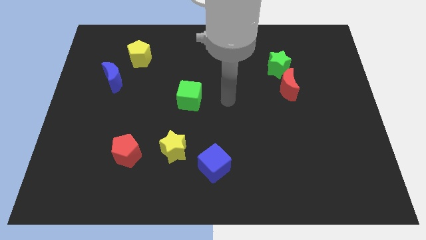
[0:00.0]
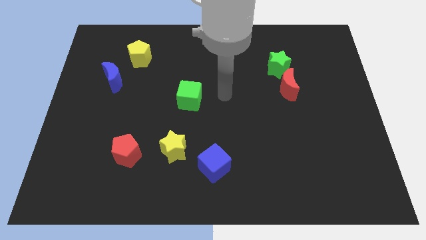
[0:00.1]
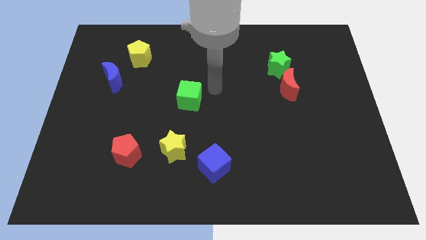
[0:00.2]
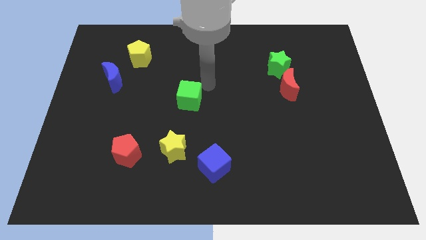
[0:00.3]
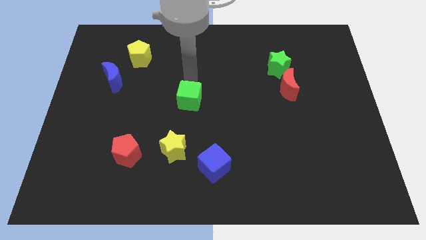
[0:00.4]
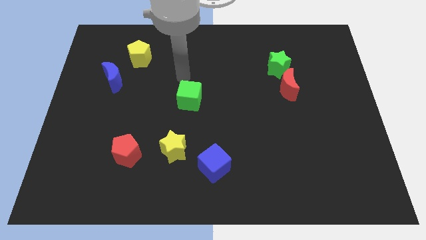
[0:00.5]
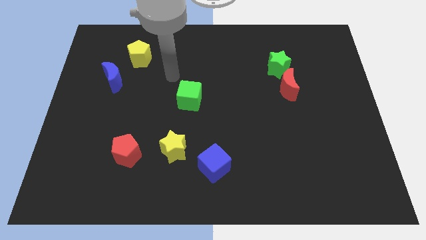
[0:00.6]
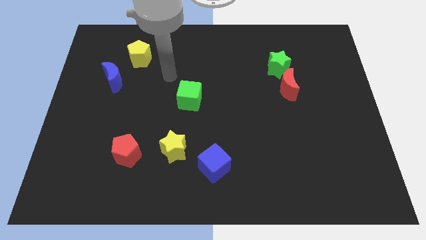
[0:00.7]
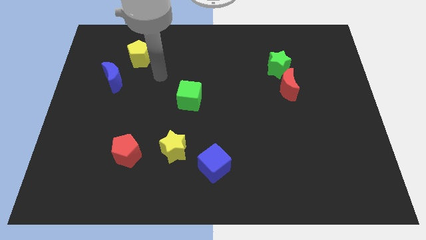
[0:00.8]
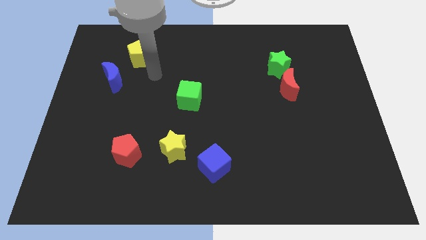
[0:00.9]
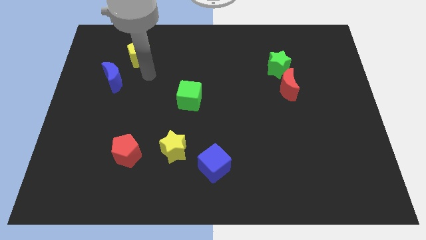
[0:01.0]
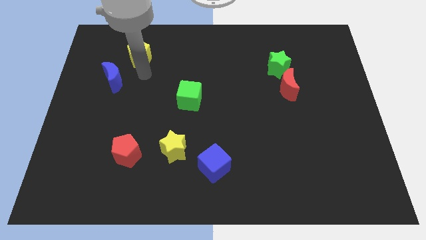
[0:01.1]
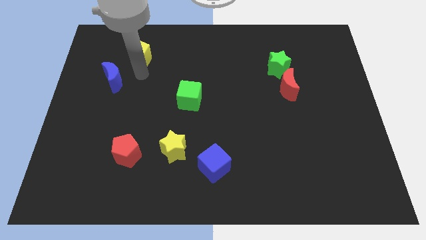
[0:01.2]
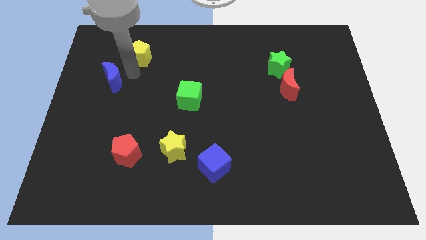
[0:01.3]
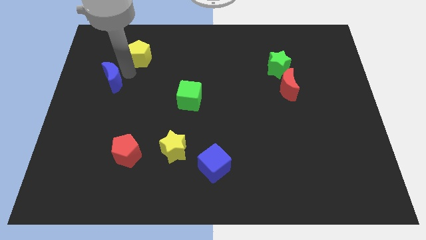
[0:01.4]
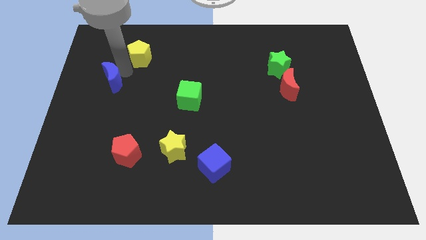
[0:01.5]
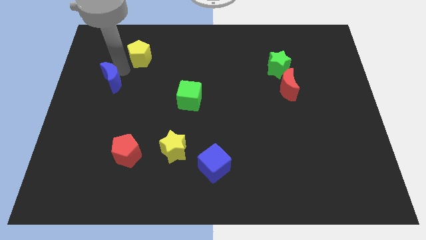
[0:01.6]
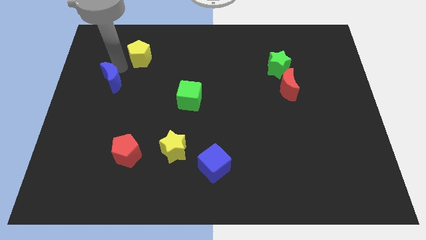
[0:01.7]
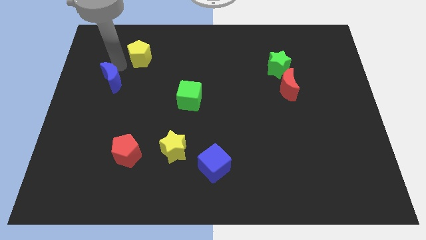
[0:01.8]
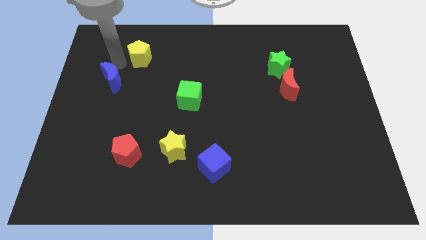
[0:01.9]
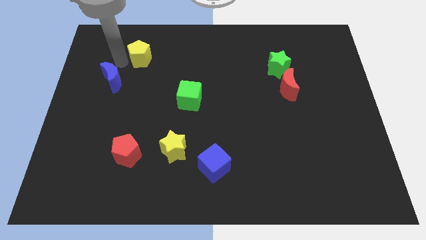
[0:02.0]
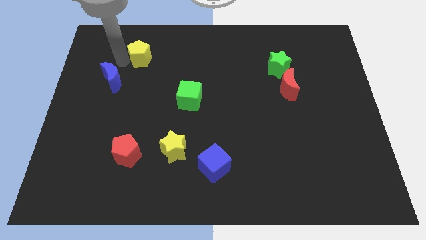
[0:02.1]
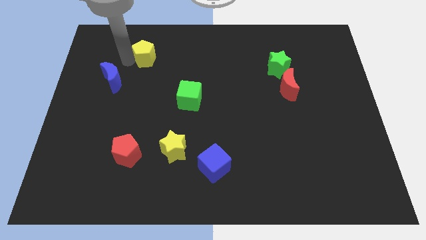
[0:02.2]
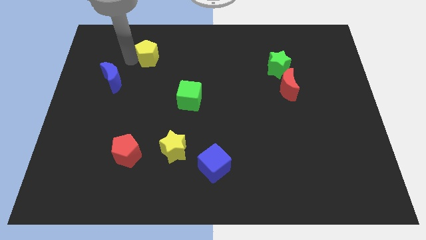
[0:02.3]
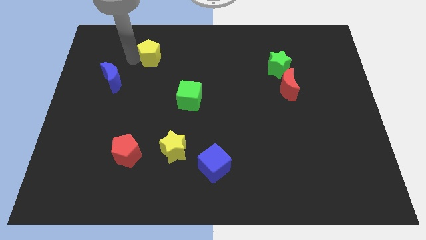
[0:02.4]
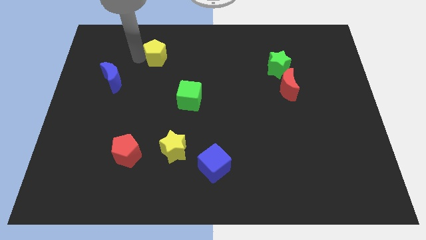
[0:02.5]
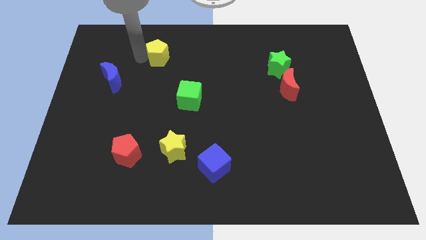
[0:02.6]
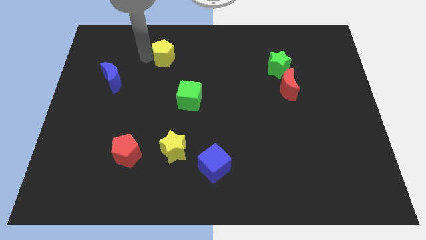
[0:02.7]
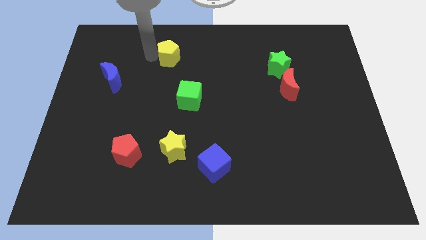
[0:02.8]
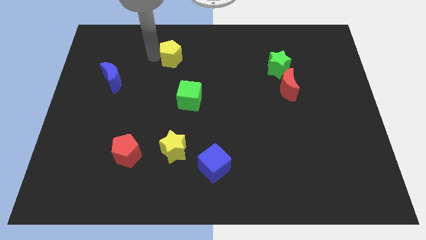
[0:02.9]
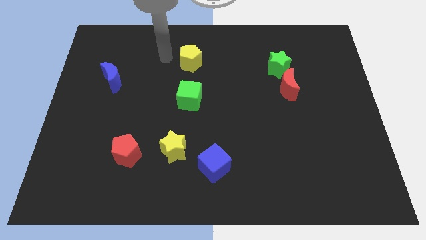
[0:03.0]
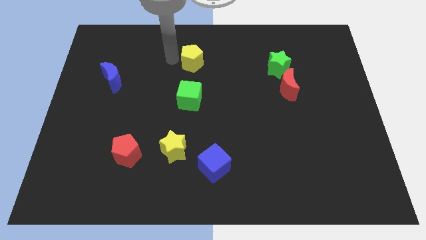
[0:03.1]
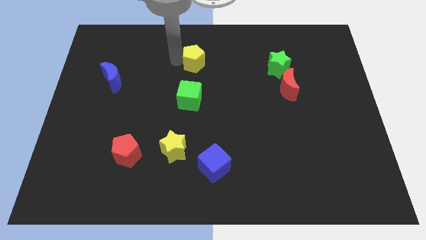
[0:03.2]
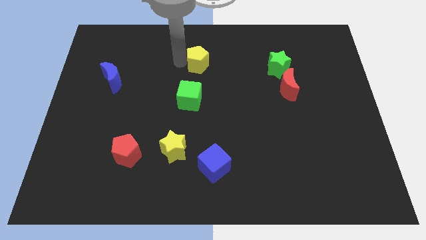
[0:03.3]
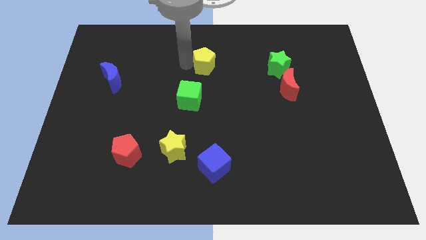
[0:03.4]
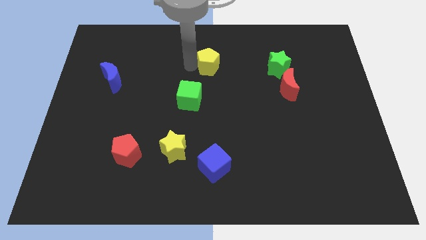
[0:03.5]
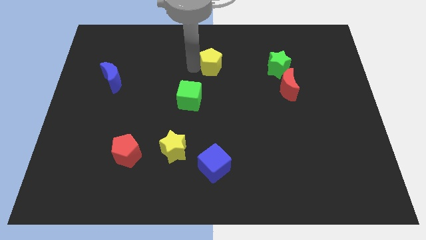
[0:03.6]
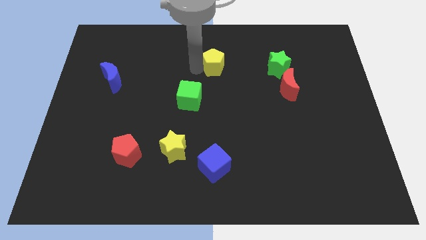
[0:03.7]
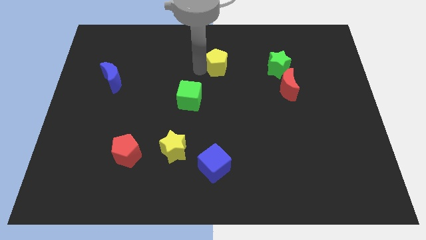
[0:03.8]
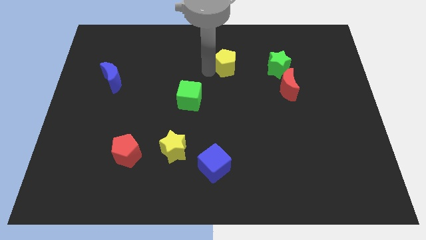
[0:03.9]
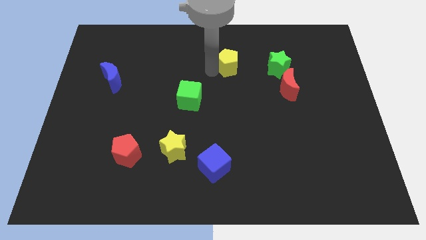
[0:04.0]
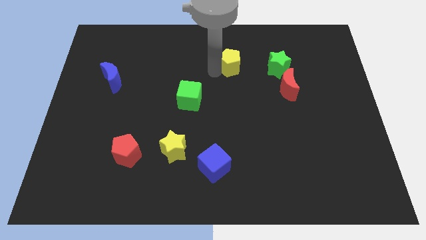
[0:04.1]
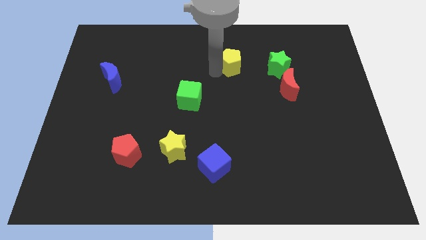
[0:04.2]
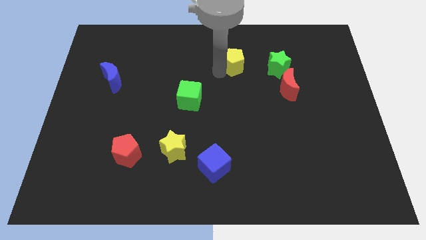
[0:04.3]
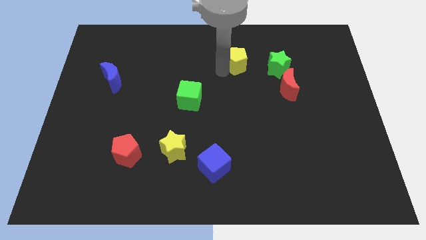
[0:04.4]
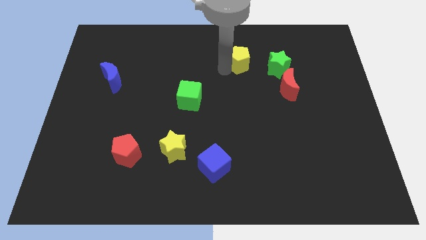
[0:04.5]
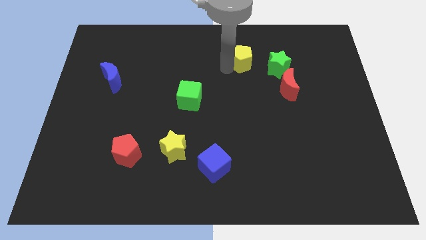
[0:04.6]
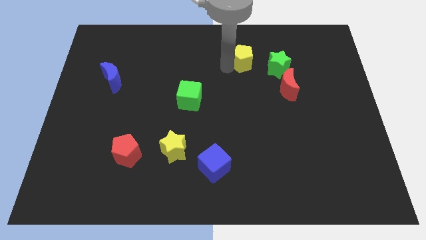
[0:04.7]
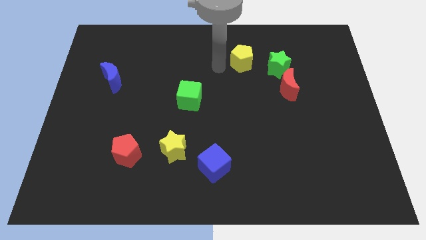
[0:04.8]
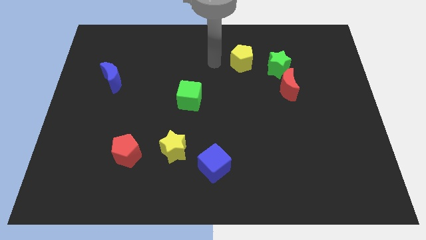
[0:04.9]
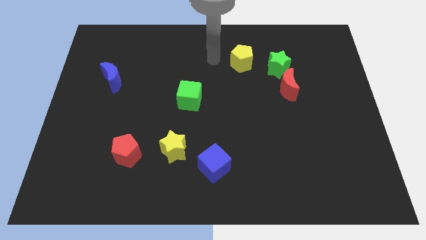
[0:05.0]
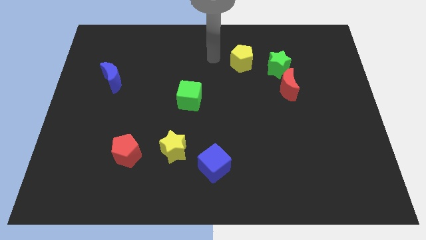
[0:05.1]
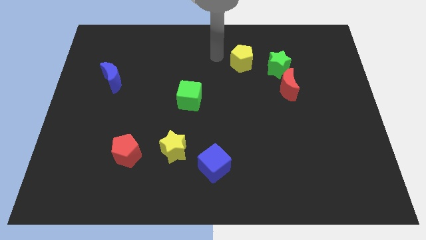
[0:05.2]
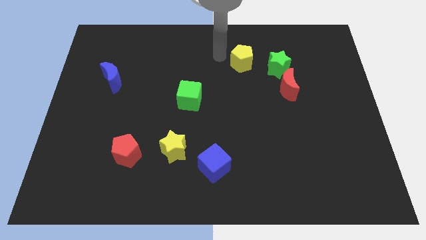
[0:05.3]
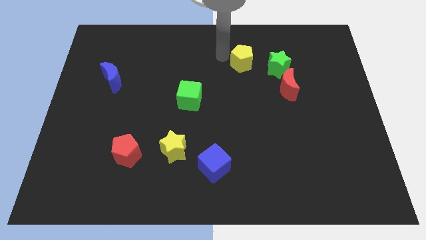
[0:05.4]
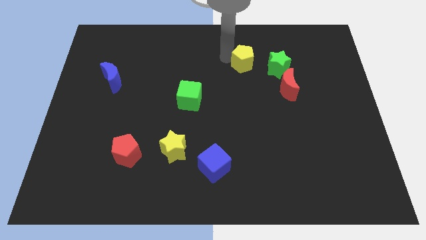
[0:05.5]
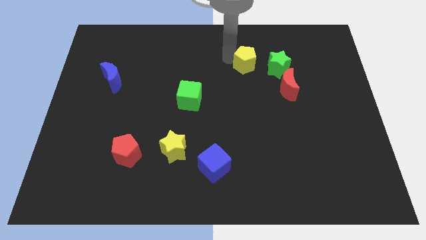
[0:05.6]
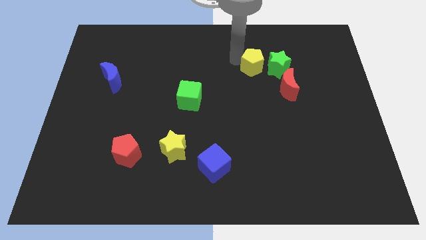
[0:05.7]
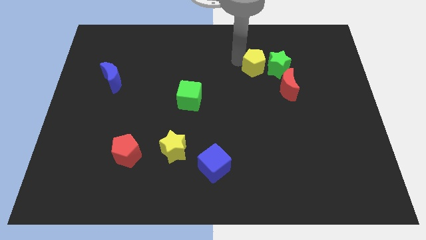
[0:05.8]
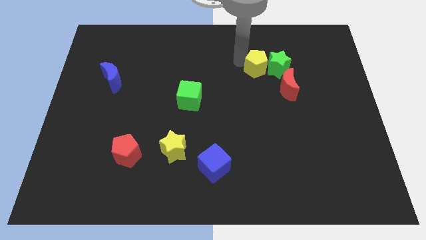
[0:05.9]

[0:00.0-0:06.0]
push the yellow pentagon towards the green star

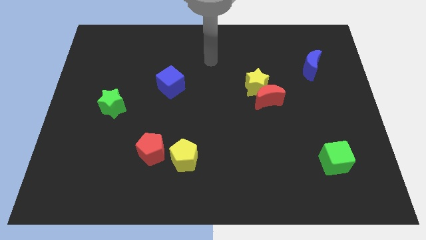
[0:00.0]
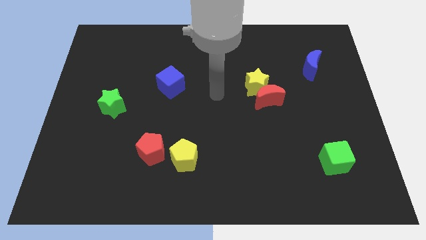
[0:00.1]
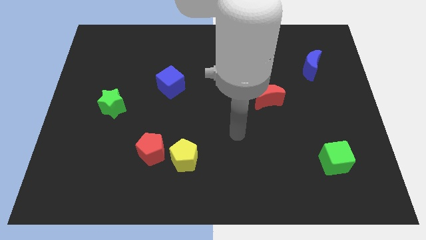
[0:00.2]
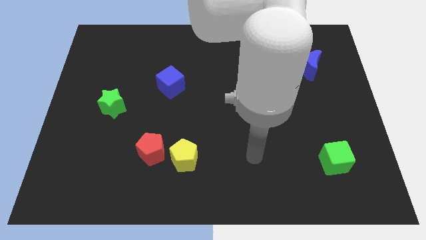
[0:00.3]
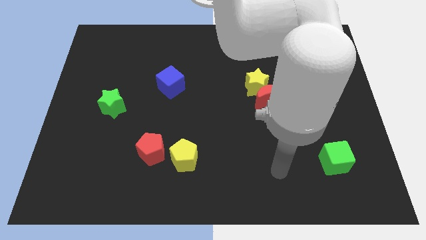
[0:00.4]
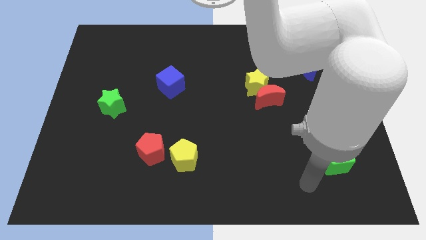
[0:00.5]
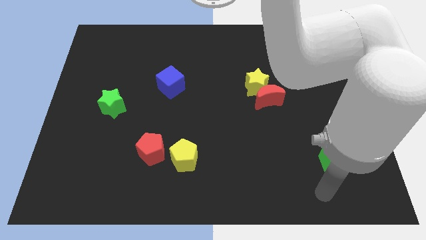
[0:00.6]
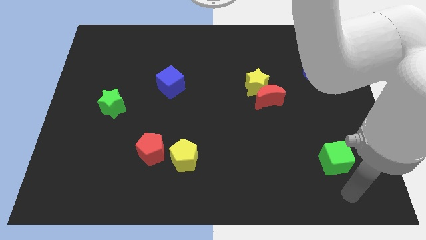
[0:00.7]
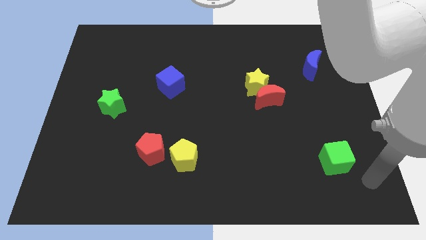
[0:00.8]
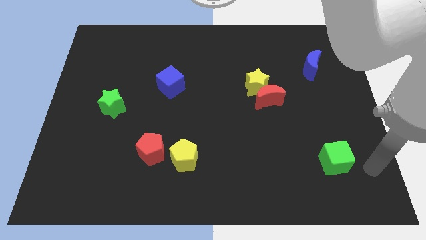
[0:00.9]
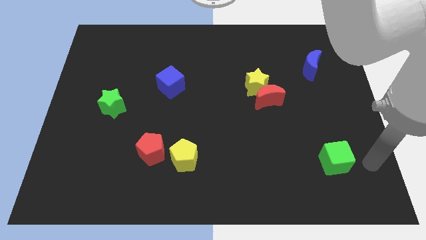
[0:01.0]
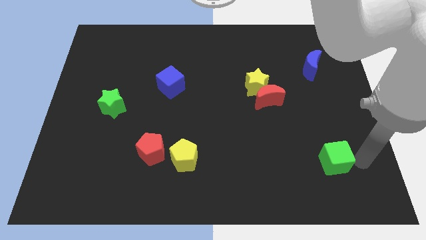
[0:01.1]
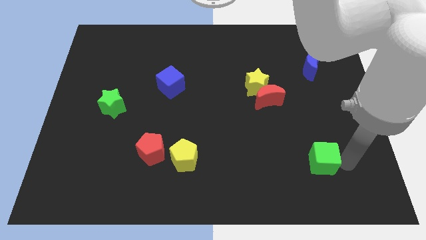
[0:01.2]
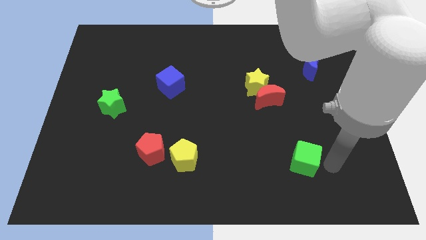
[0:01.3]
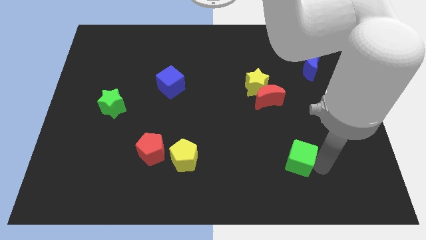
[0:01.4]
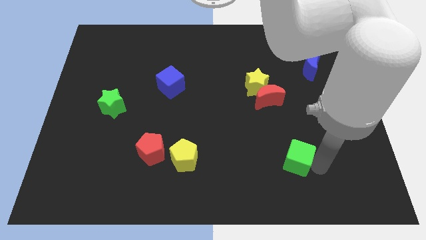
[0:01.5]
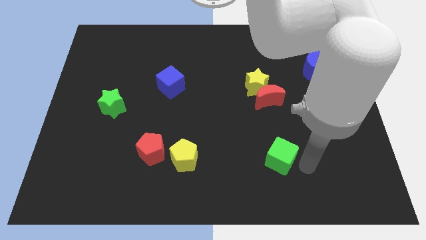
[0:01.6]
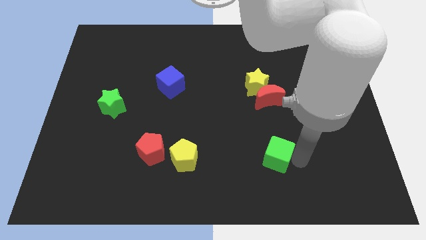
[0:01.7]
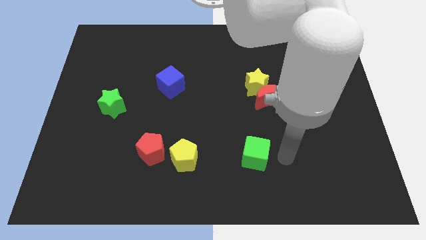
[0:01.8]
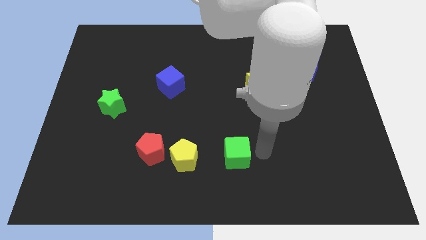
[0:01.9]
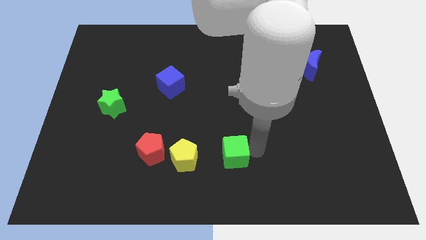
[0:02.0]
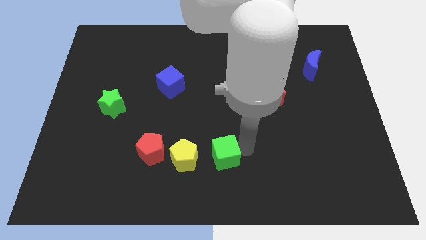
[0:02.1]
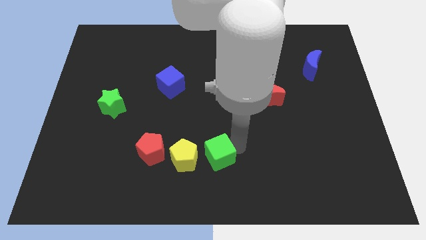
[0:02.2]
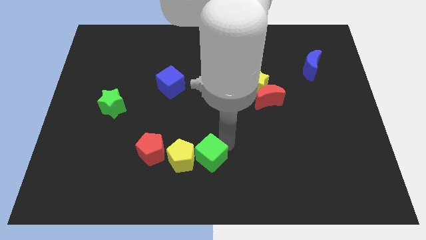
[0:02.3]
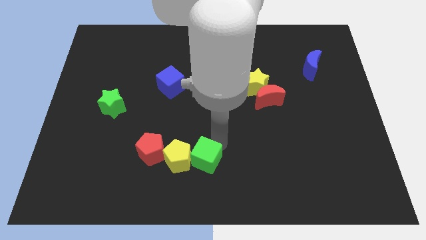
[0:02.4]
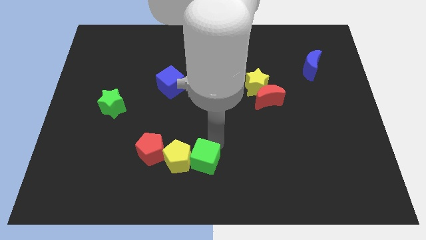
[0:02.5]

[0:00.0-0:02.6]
push the green cube next to the yellow pentagon

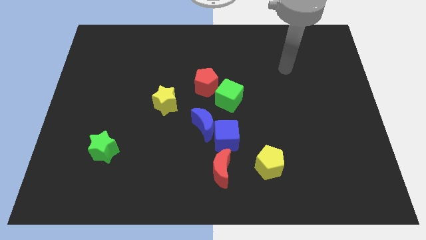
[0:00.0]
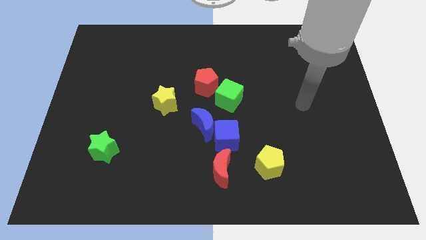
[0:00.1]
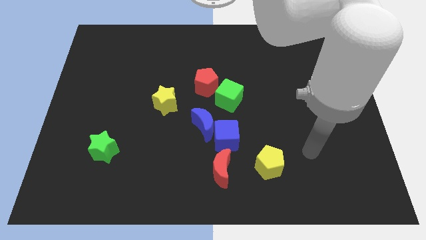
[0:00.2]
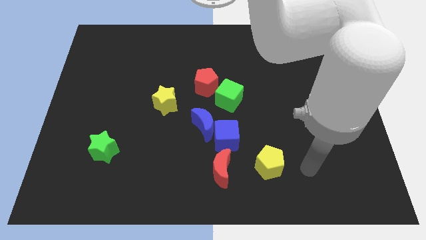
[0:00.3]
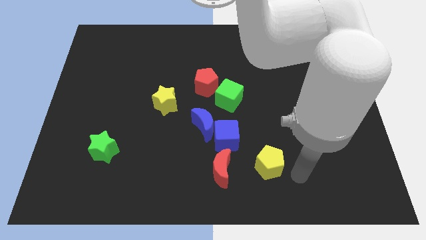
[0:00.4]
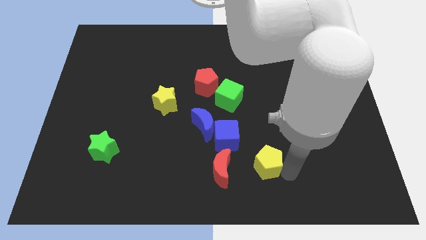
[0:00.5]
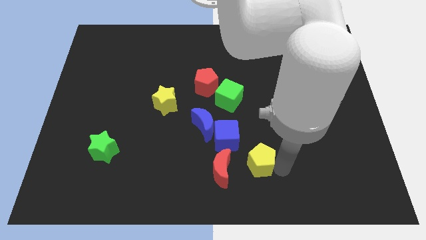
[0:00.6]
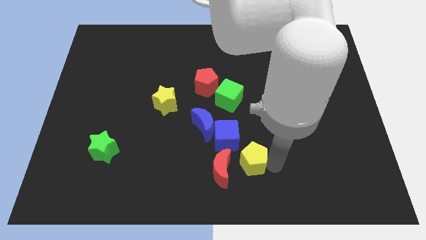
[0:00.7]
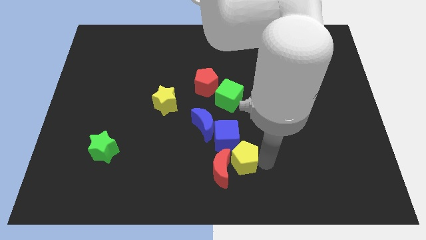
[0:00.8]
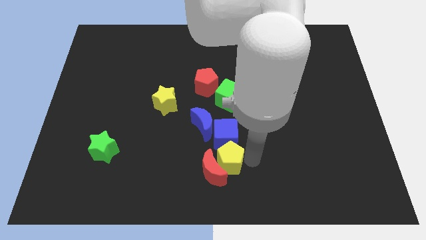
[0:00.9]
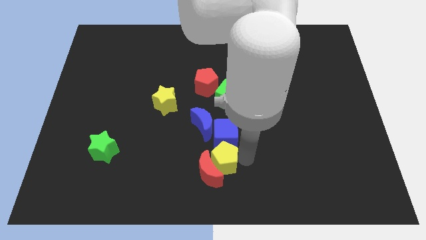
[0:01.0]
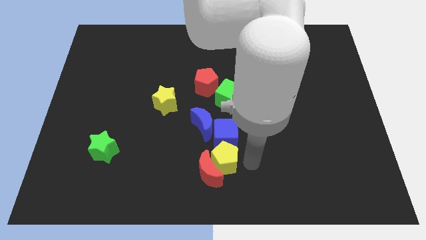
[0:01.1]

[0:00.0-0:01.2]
put the yellow pentagon close to the blue cube
